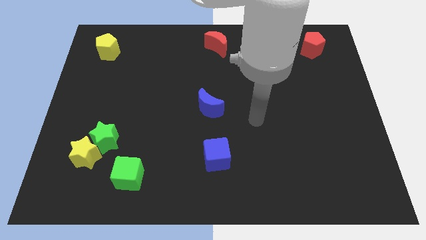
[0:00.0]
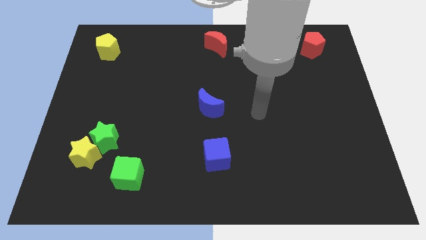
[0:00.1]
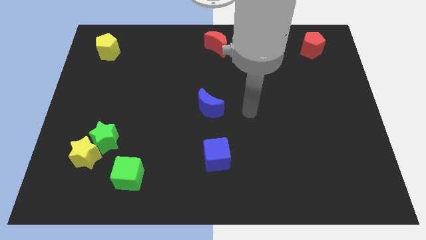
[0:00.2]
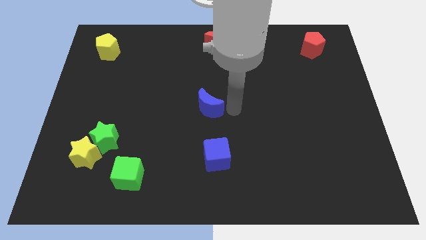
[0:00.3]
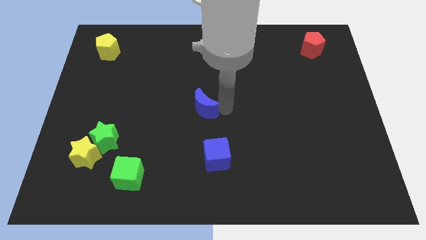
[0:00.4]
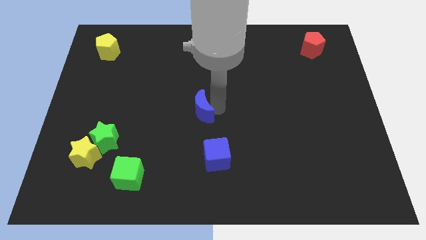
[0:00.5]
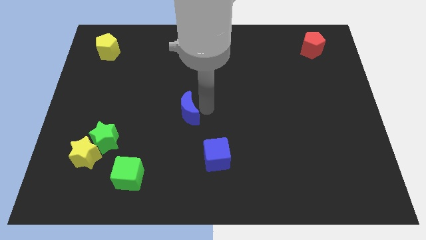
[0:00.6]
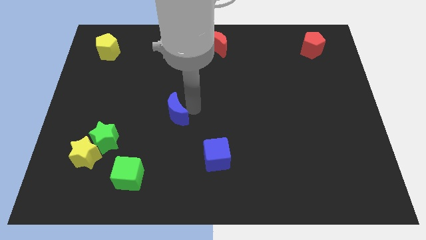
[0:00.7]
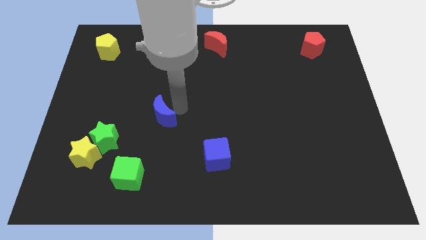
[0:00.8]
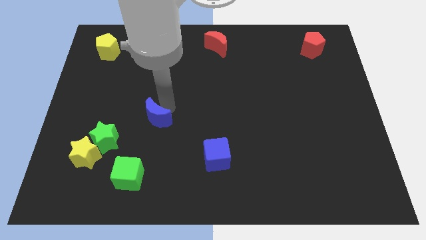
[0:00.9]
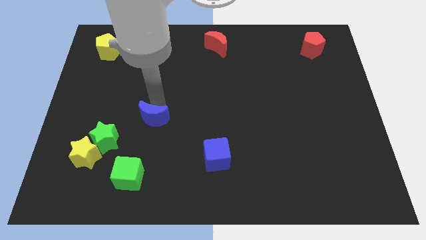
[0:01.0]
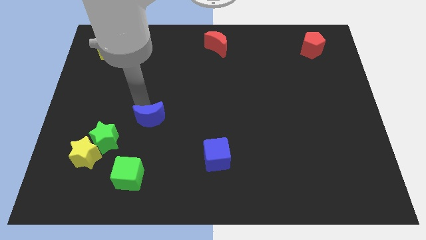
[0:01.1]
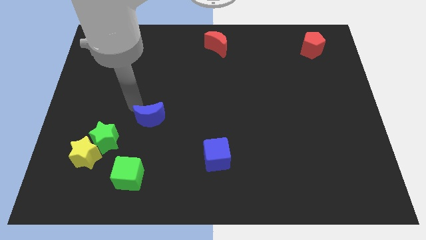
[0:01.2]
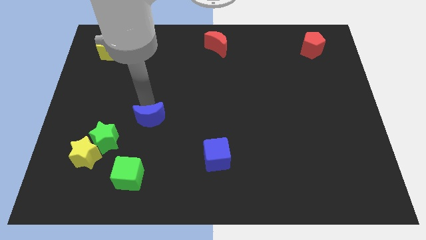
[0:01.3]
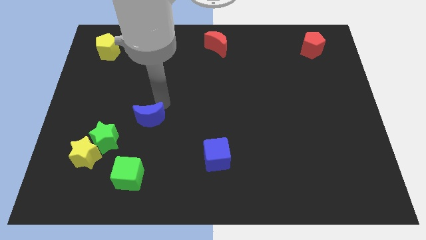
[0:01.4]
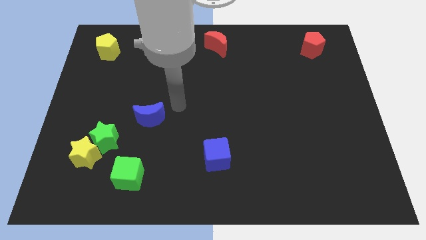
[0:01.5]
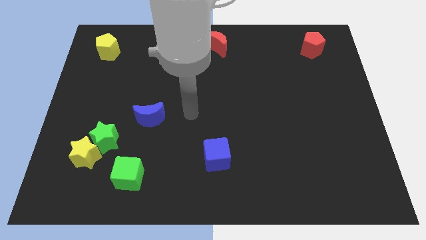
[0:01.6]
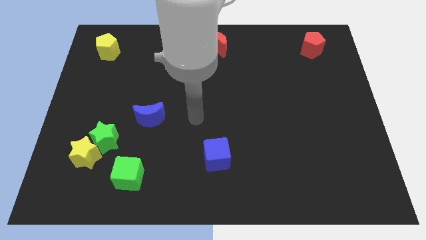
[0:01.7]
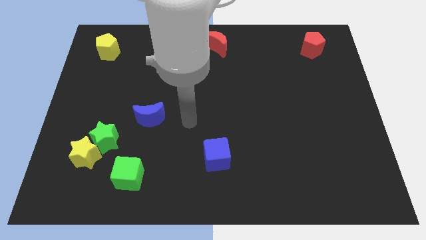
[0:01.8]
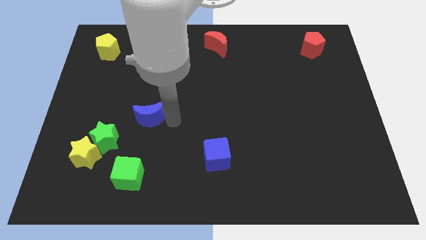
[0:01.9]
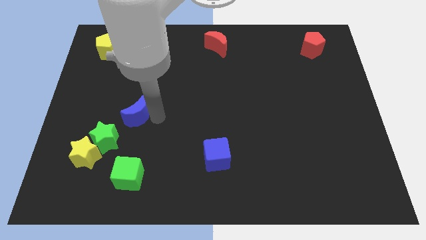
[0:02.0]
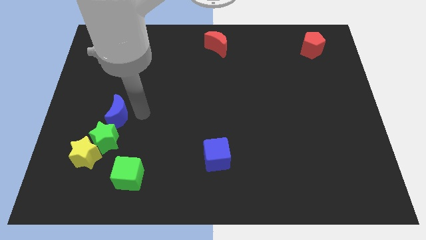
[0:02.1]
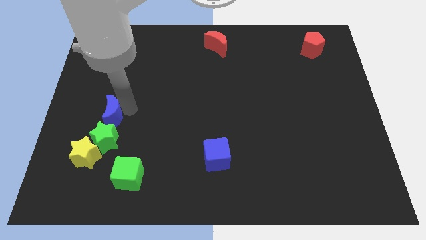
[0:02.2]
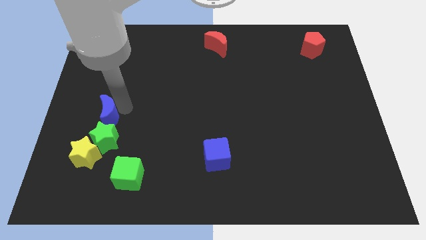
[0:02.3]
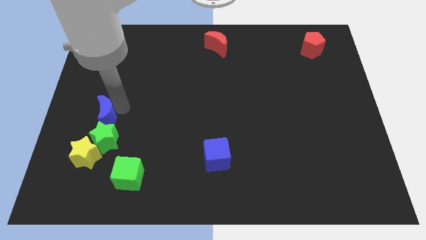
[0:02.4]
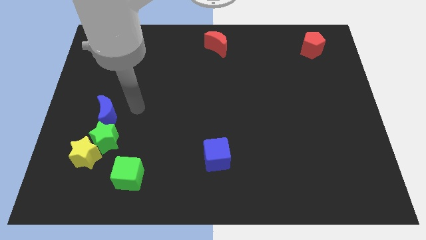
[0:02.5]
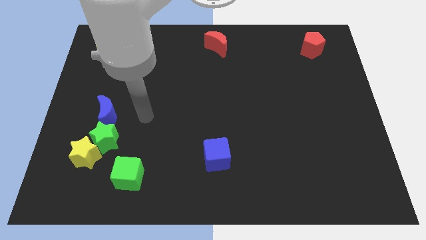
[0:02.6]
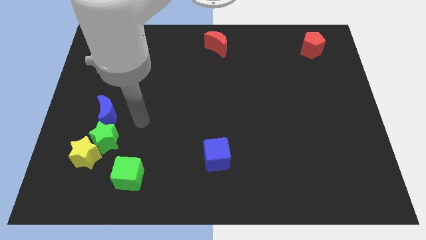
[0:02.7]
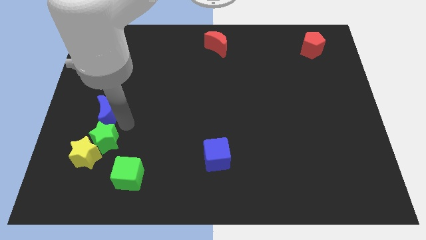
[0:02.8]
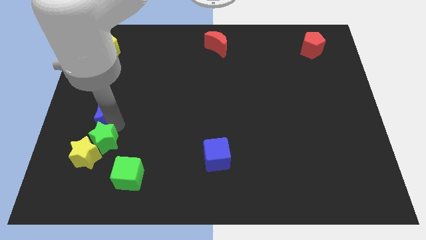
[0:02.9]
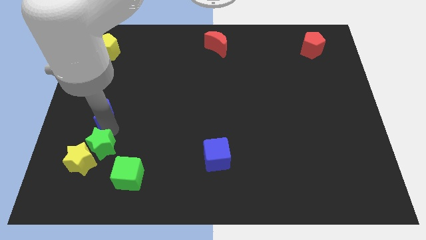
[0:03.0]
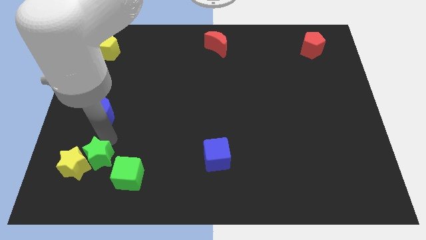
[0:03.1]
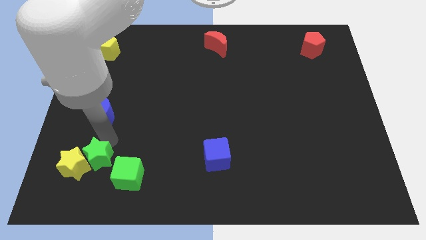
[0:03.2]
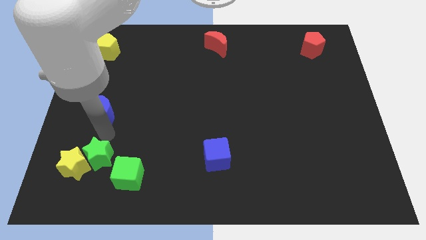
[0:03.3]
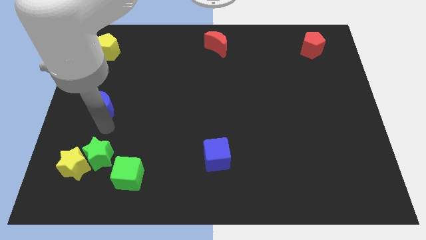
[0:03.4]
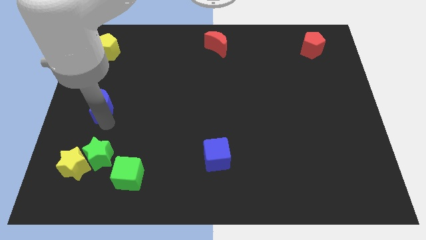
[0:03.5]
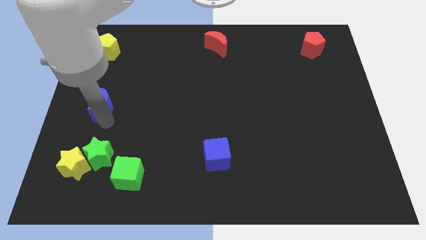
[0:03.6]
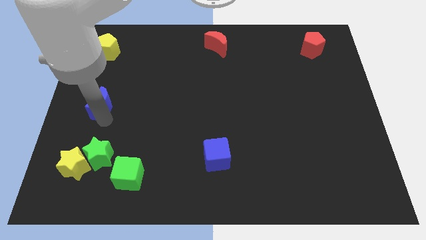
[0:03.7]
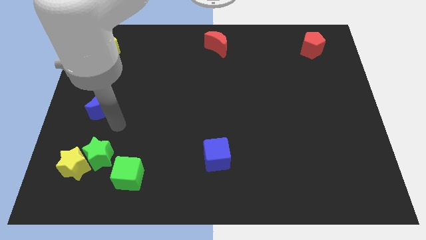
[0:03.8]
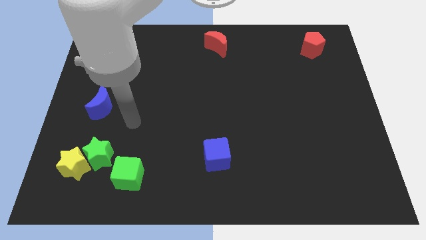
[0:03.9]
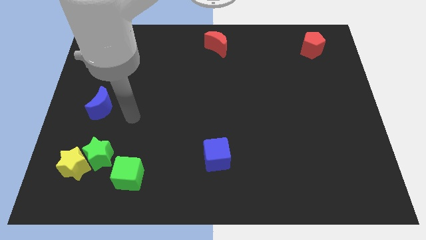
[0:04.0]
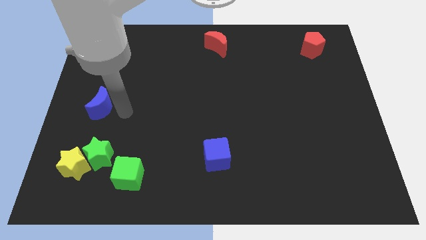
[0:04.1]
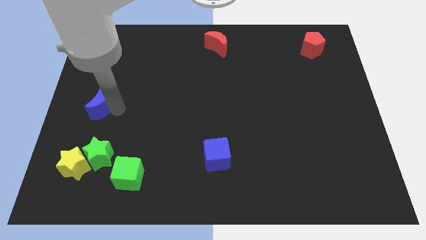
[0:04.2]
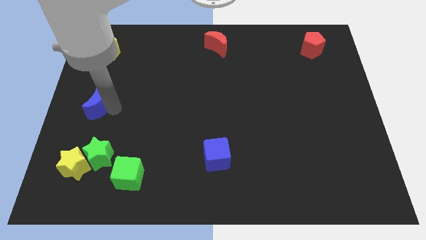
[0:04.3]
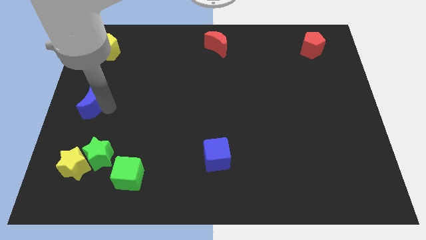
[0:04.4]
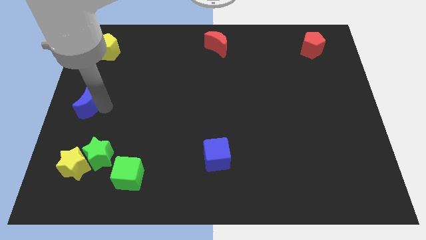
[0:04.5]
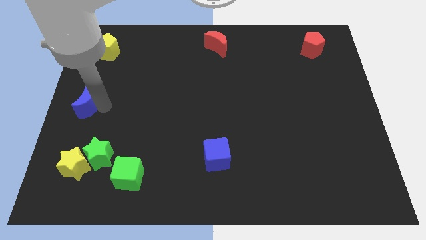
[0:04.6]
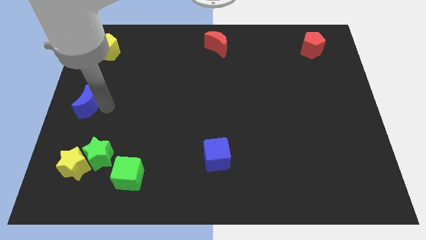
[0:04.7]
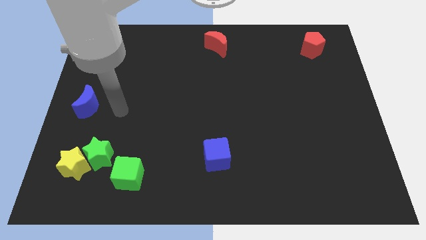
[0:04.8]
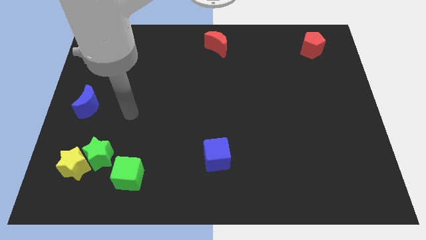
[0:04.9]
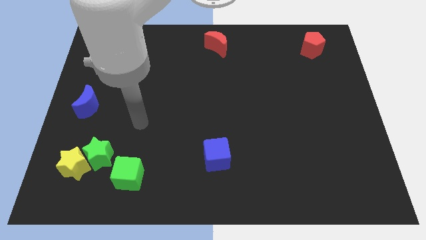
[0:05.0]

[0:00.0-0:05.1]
move the blue crescent to the left center of the board

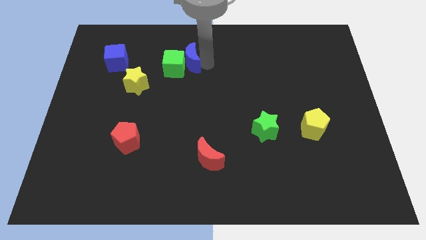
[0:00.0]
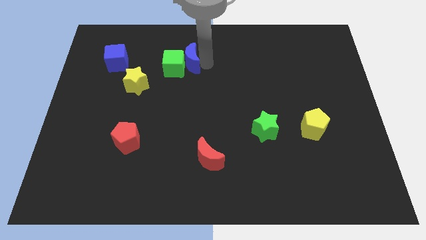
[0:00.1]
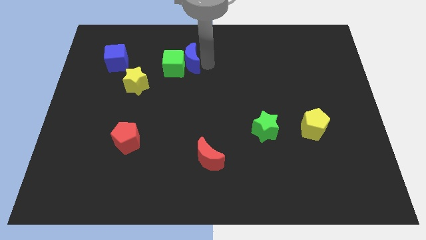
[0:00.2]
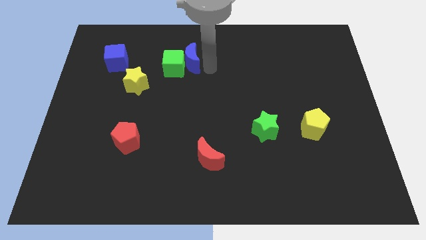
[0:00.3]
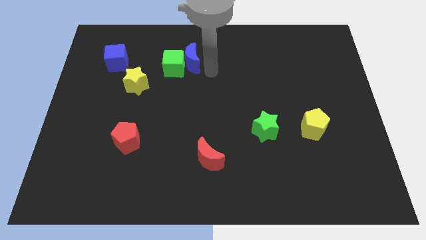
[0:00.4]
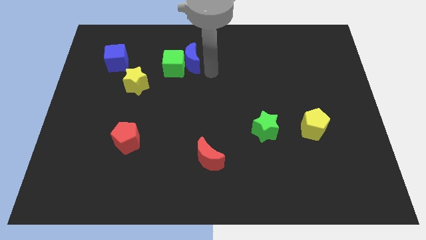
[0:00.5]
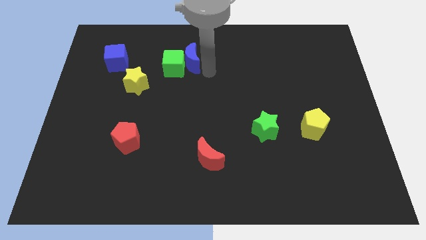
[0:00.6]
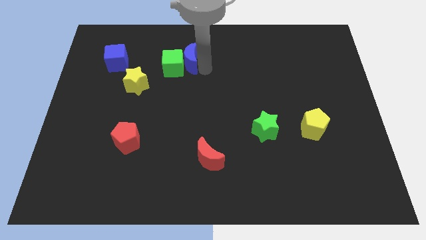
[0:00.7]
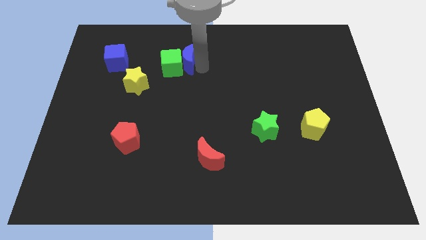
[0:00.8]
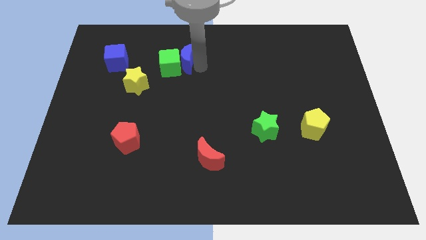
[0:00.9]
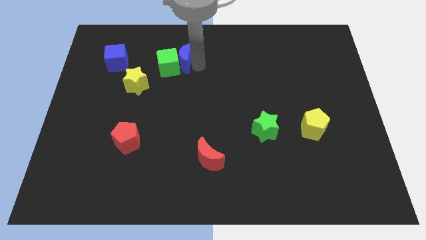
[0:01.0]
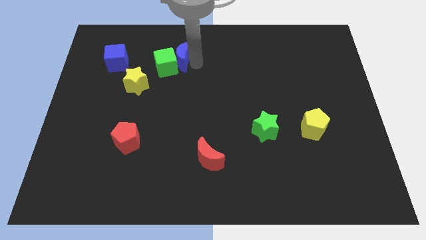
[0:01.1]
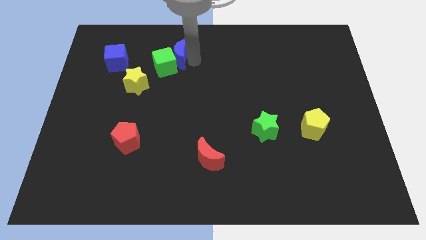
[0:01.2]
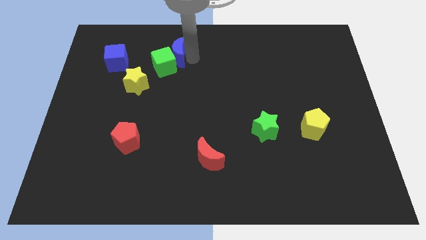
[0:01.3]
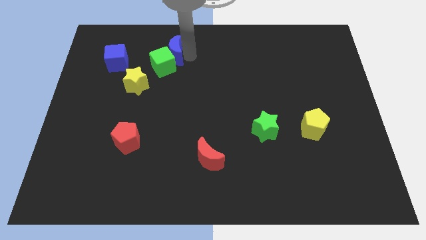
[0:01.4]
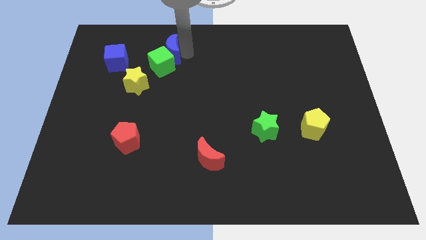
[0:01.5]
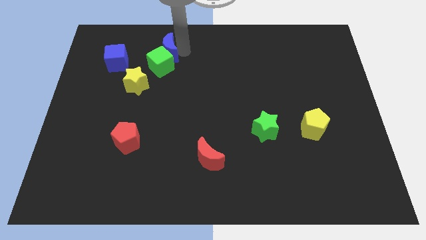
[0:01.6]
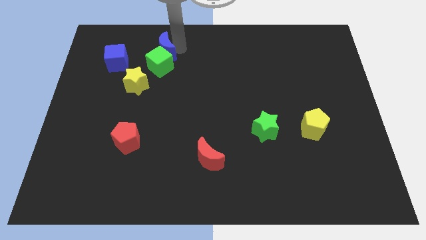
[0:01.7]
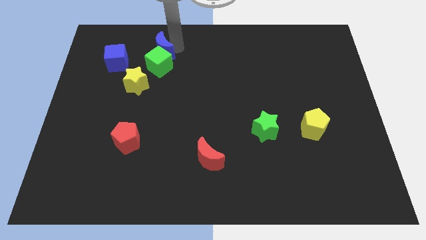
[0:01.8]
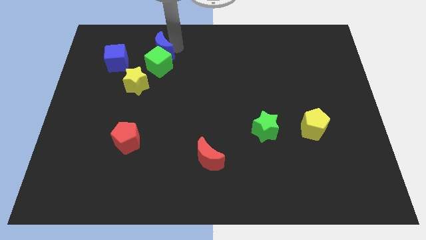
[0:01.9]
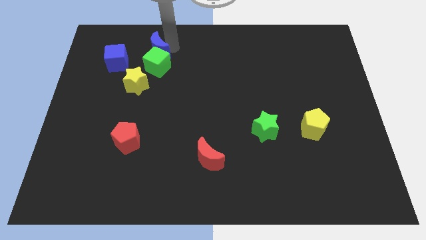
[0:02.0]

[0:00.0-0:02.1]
slide blue moon on top of green cube

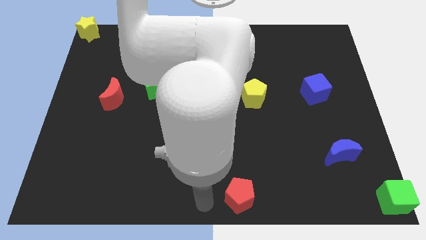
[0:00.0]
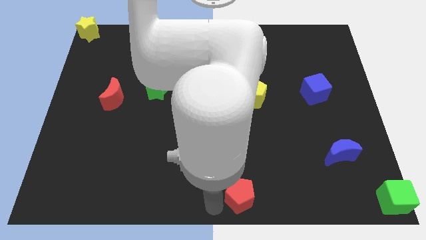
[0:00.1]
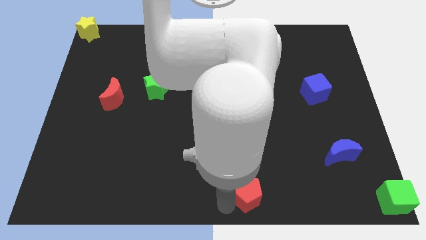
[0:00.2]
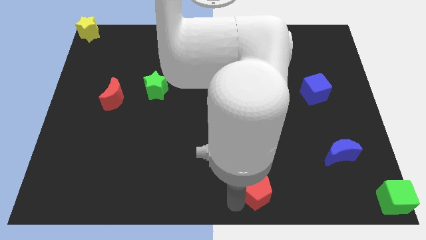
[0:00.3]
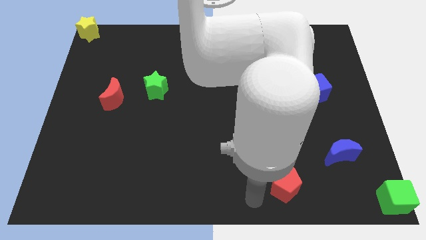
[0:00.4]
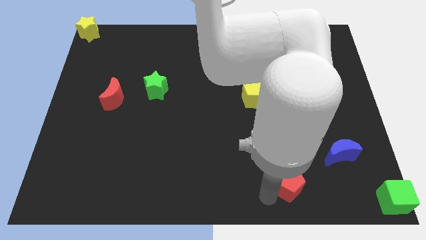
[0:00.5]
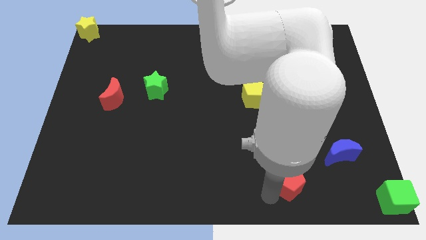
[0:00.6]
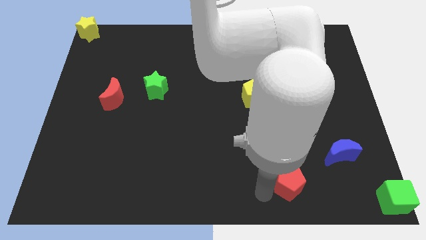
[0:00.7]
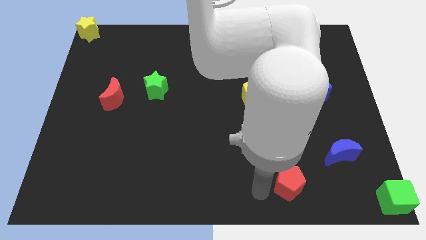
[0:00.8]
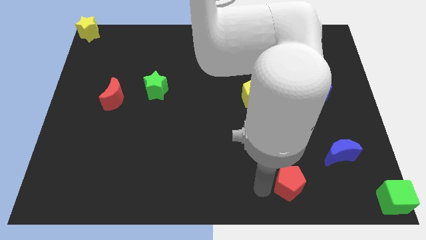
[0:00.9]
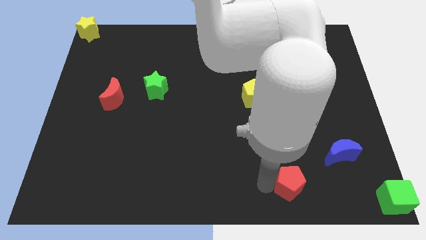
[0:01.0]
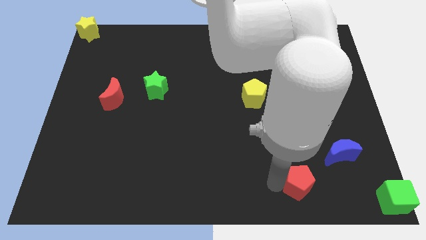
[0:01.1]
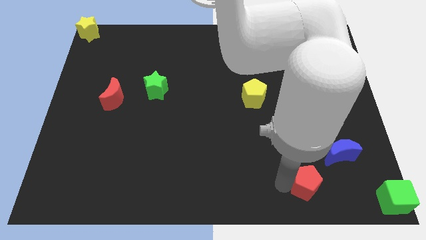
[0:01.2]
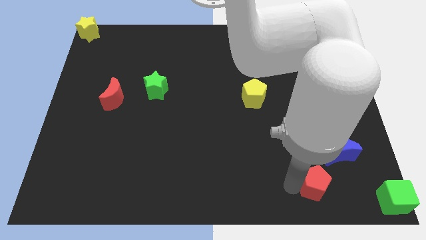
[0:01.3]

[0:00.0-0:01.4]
push the red pentagon to the right side of the board

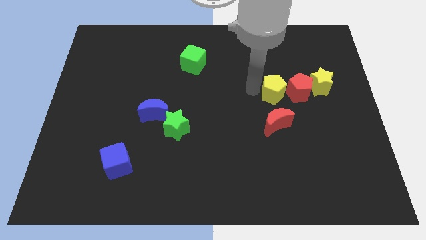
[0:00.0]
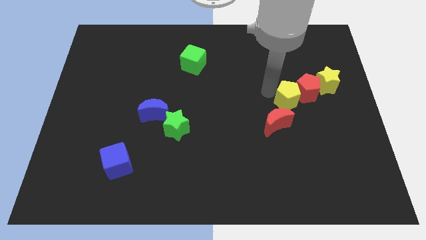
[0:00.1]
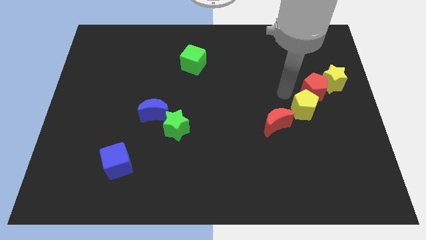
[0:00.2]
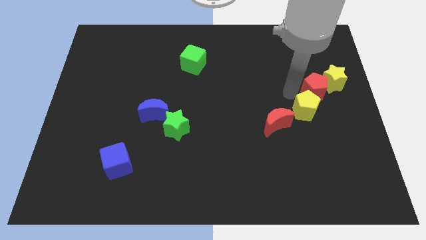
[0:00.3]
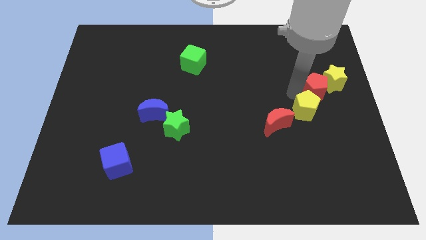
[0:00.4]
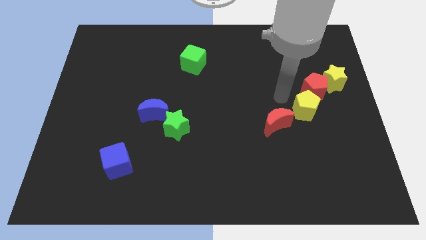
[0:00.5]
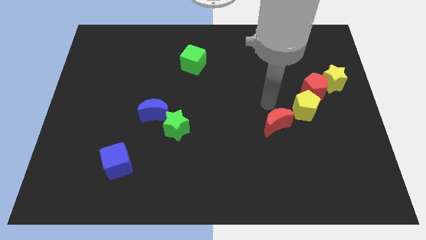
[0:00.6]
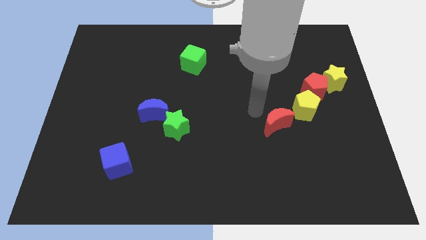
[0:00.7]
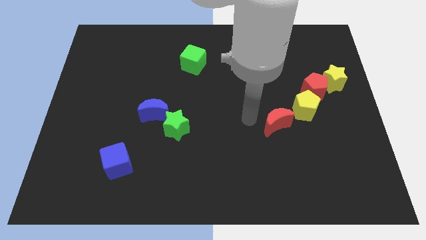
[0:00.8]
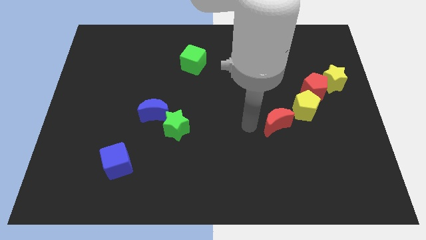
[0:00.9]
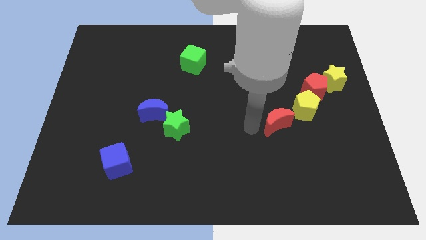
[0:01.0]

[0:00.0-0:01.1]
move the yellow pentagon to the top right side of the red crescent
